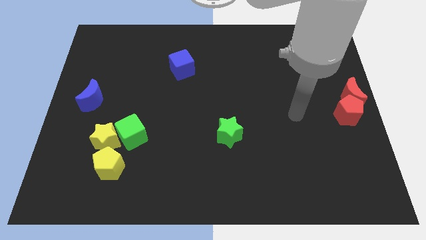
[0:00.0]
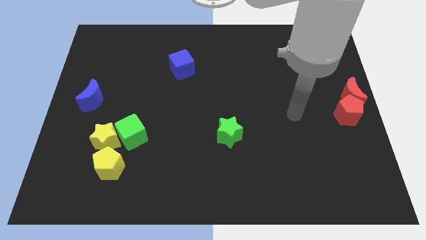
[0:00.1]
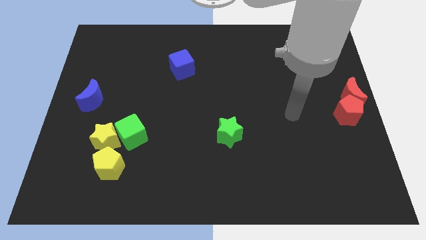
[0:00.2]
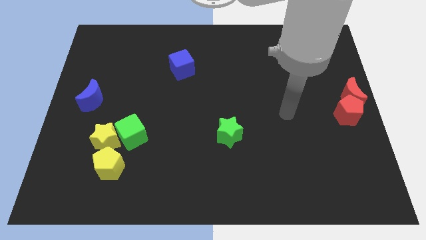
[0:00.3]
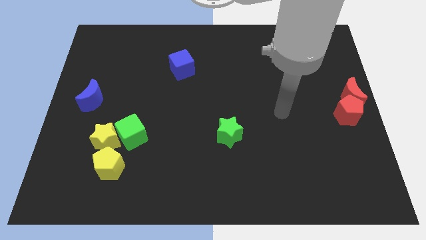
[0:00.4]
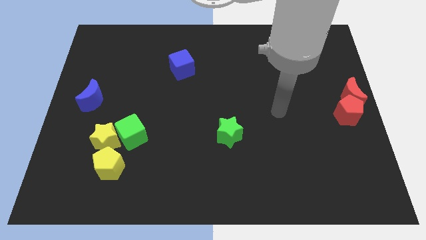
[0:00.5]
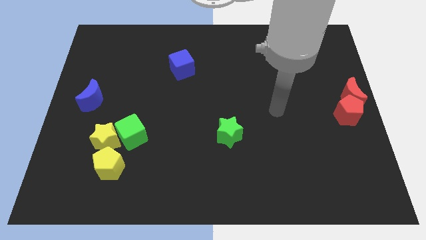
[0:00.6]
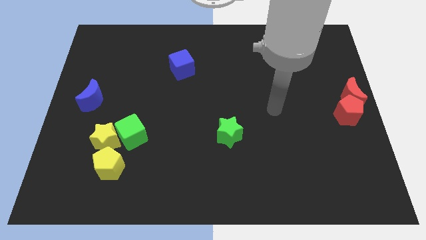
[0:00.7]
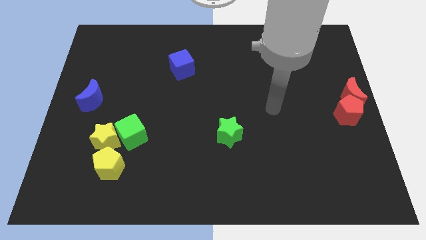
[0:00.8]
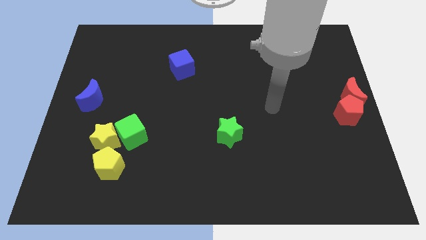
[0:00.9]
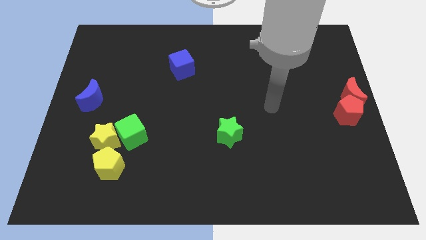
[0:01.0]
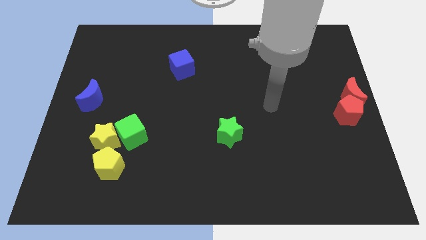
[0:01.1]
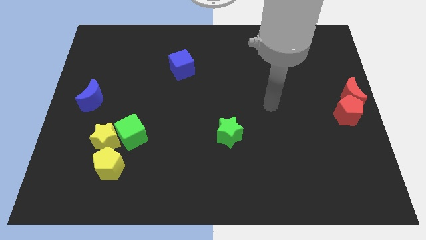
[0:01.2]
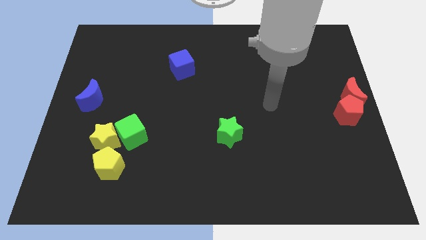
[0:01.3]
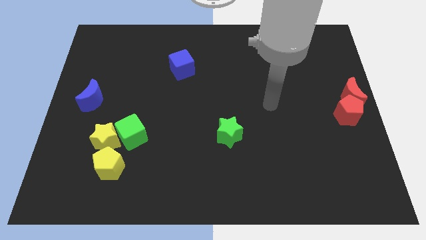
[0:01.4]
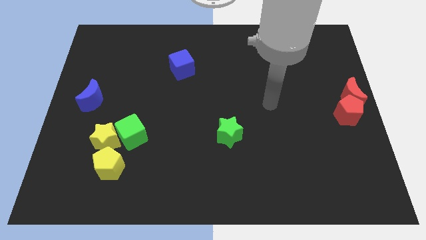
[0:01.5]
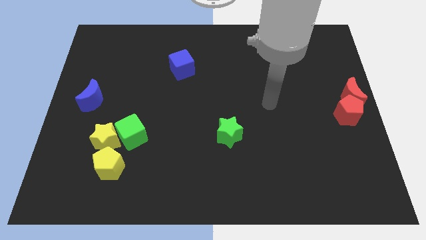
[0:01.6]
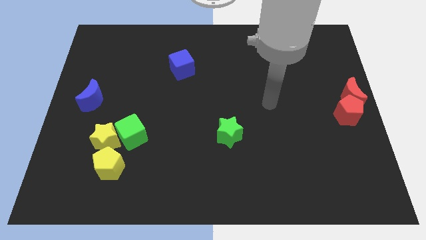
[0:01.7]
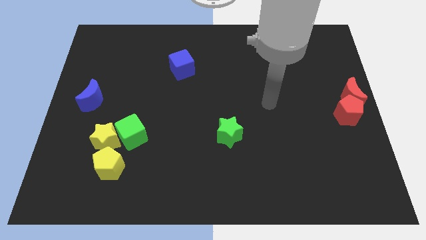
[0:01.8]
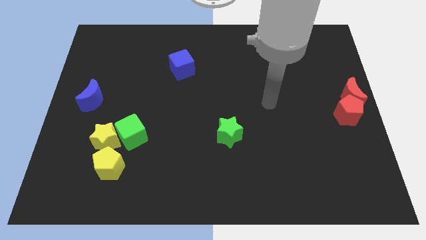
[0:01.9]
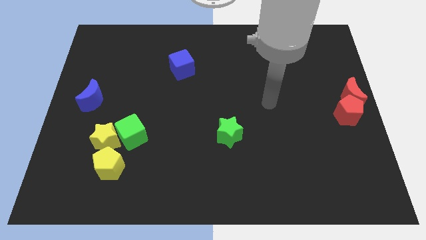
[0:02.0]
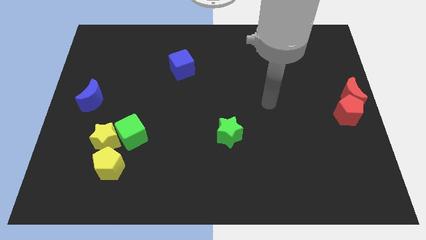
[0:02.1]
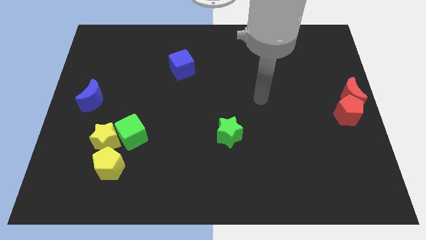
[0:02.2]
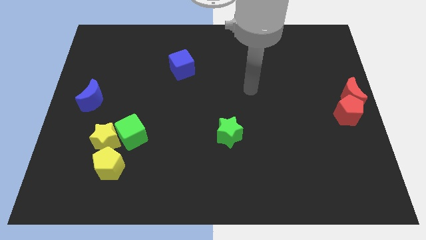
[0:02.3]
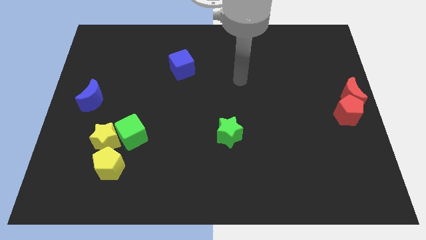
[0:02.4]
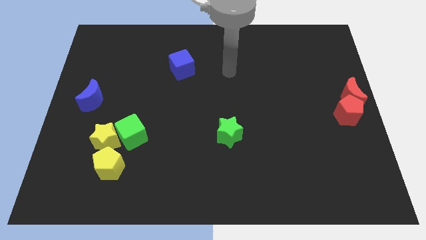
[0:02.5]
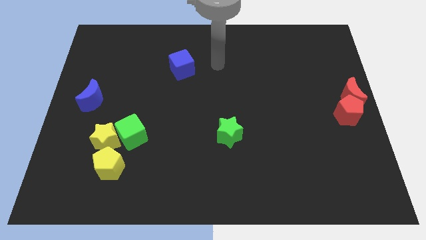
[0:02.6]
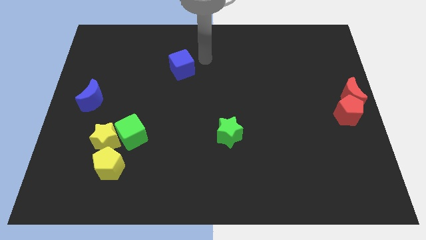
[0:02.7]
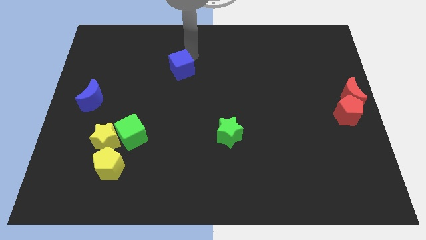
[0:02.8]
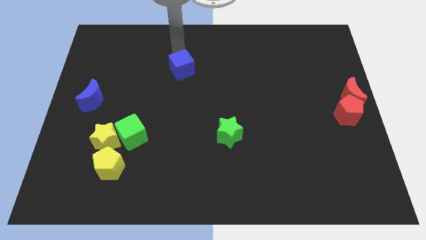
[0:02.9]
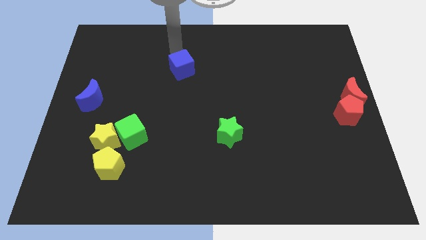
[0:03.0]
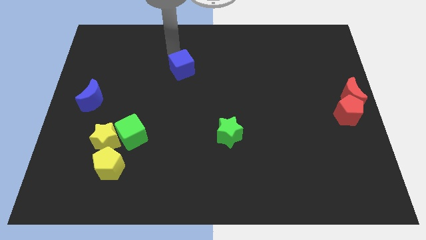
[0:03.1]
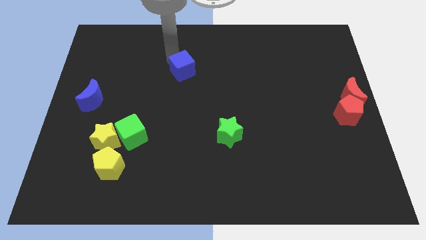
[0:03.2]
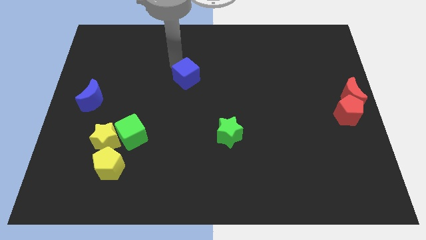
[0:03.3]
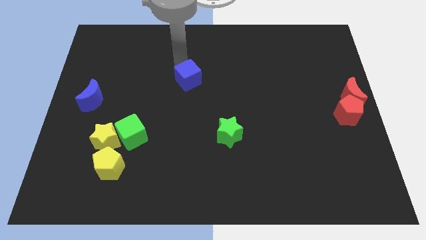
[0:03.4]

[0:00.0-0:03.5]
go near blue cube

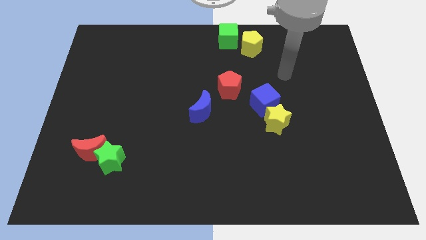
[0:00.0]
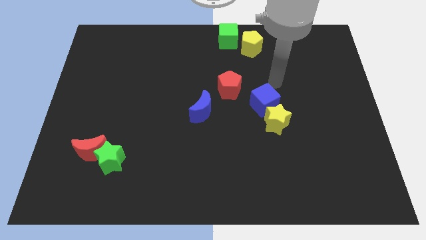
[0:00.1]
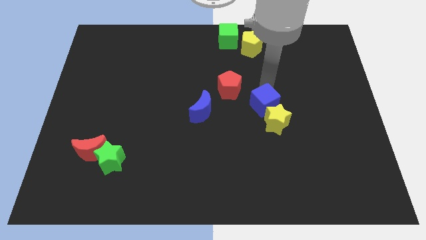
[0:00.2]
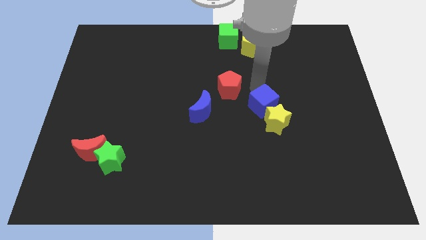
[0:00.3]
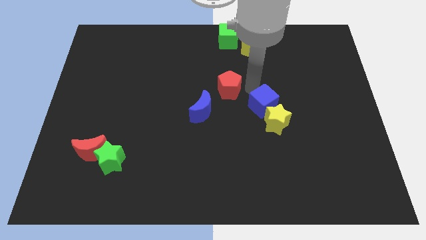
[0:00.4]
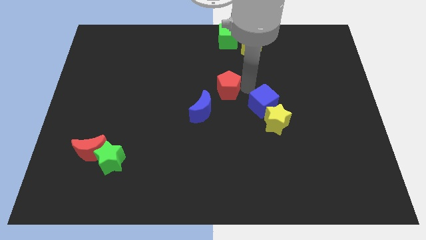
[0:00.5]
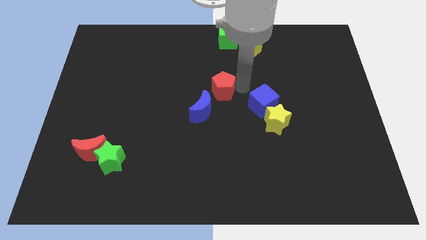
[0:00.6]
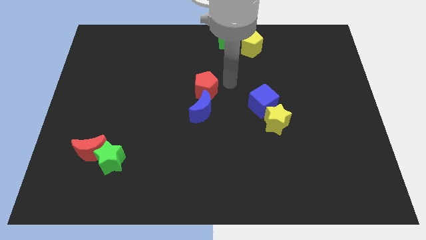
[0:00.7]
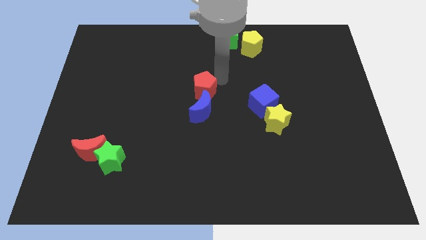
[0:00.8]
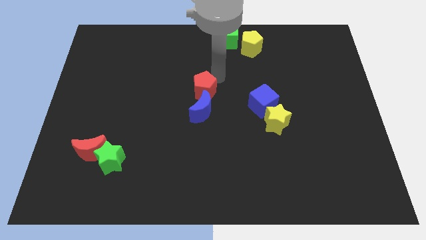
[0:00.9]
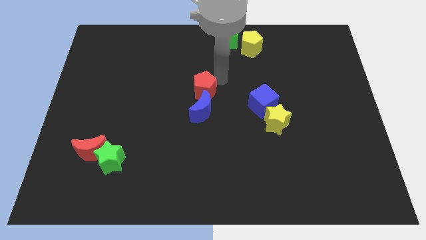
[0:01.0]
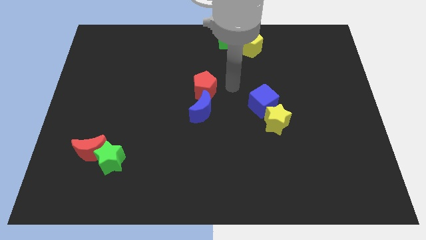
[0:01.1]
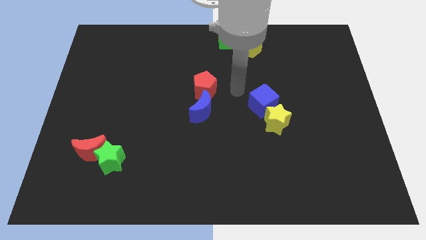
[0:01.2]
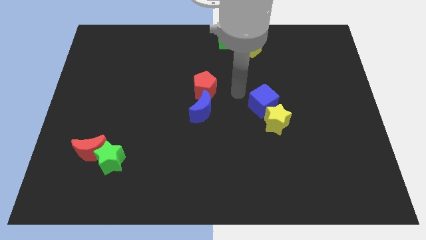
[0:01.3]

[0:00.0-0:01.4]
move the red pentago to the left

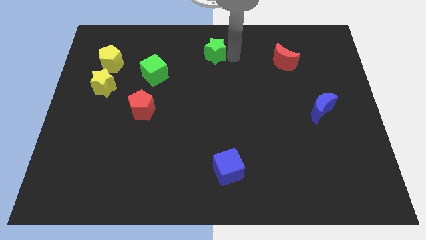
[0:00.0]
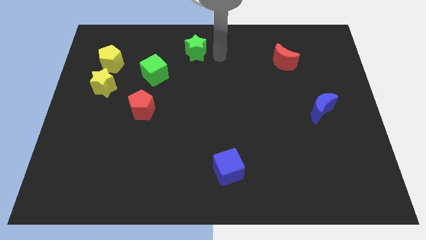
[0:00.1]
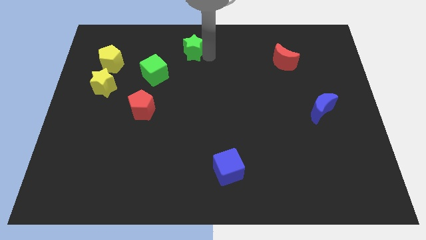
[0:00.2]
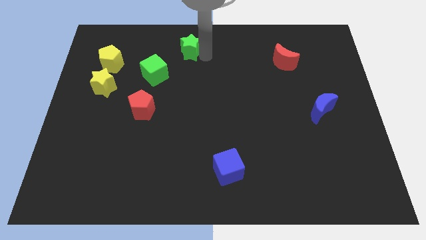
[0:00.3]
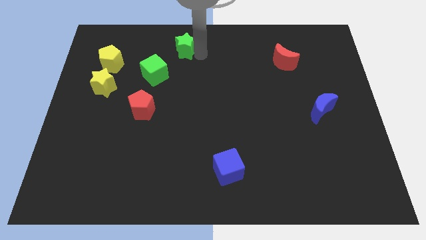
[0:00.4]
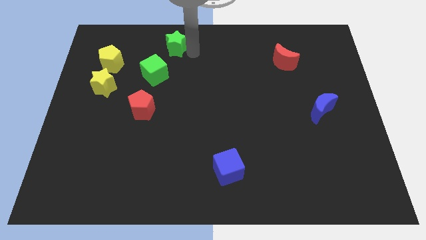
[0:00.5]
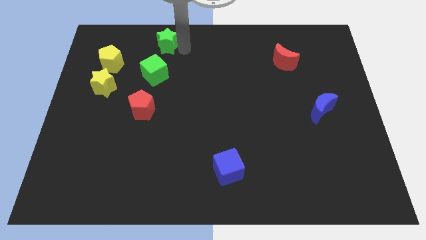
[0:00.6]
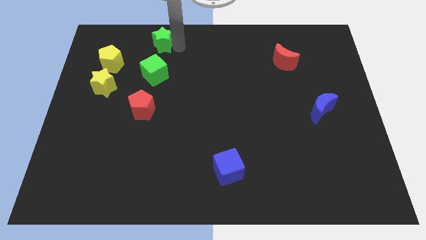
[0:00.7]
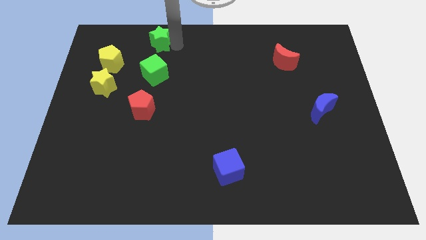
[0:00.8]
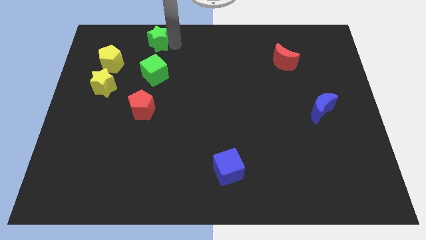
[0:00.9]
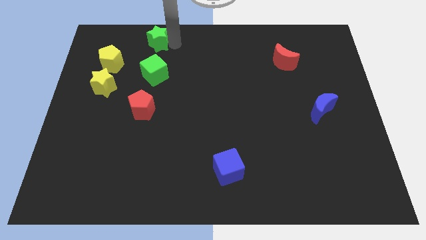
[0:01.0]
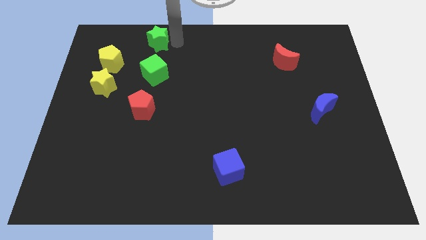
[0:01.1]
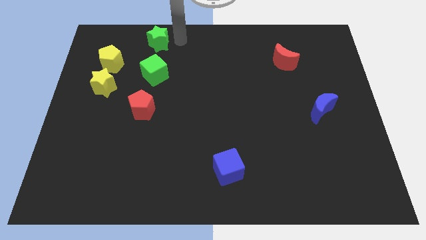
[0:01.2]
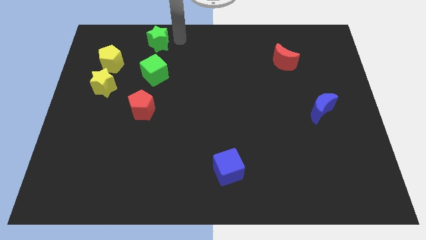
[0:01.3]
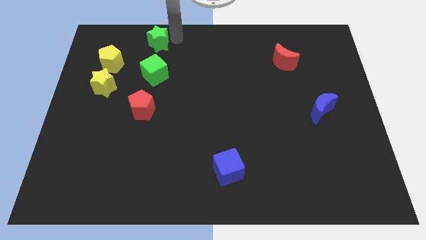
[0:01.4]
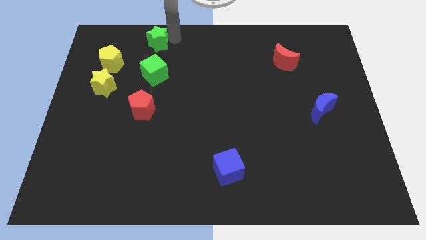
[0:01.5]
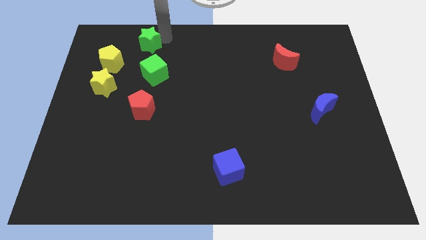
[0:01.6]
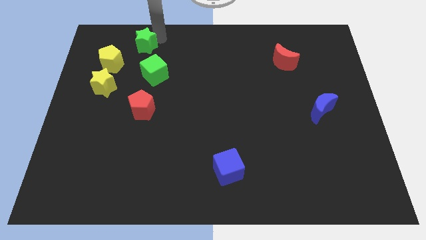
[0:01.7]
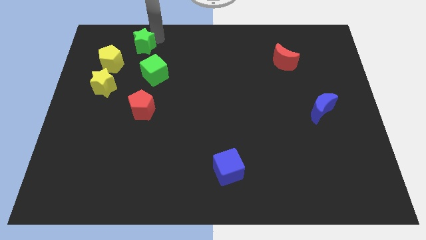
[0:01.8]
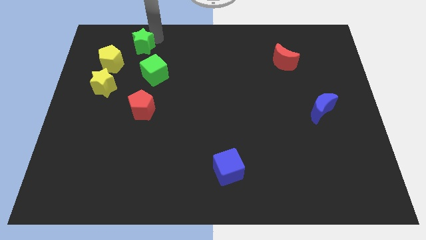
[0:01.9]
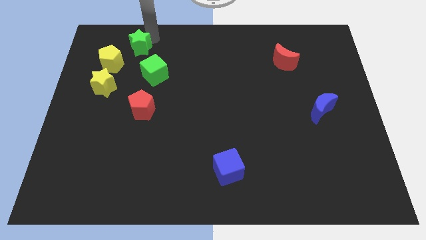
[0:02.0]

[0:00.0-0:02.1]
place green star near yellow polygon

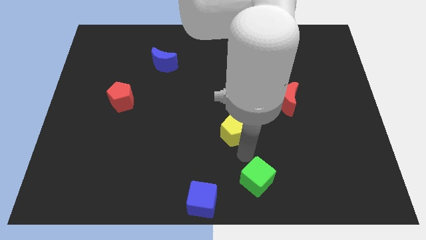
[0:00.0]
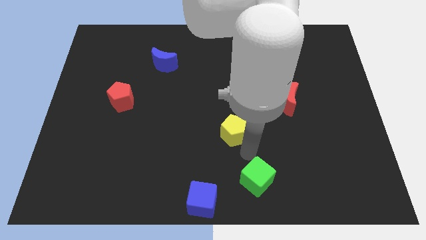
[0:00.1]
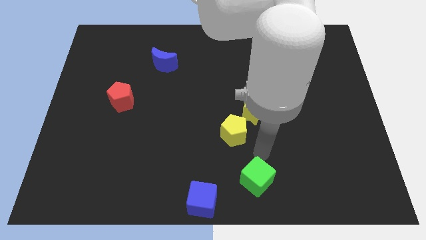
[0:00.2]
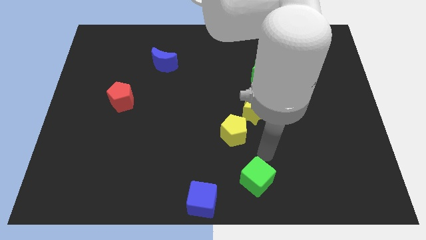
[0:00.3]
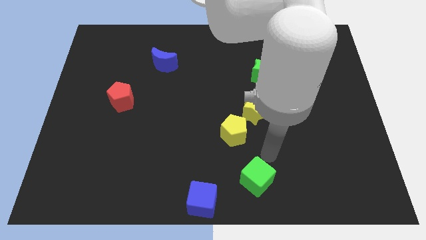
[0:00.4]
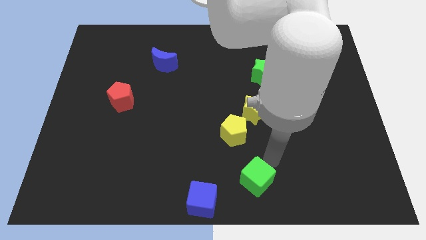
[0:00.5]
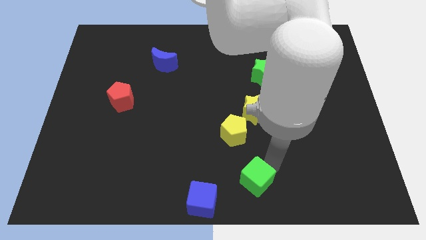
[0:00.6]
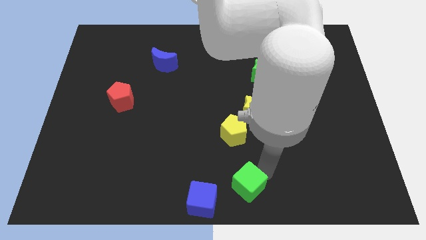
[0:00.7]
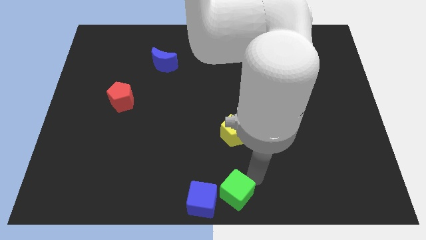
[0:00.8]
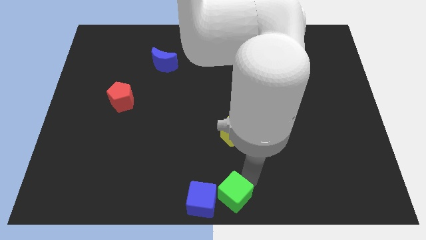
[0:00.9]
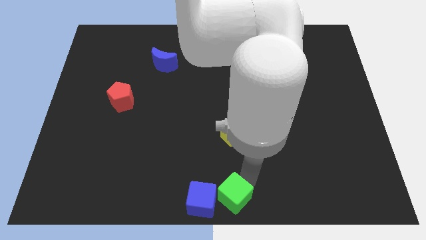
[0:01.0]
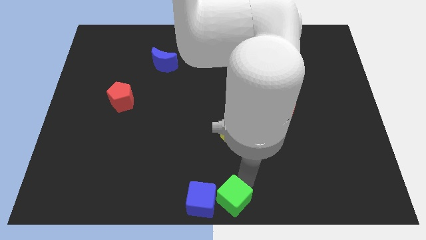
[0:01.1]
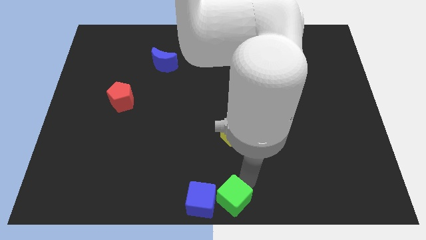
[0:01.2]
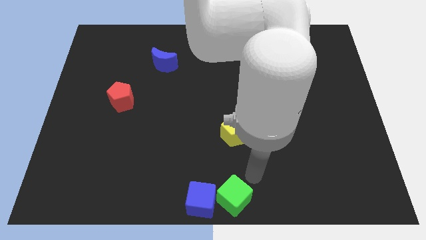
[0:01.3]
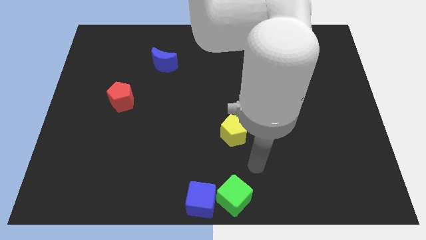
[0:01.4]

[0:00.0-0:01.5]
place the green cube to the right side of the blue cube

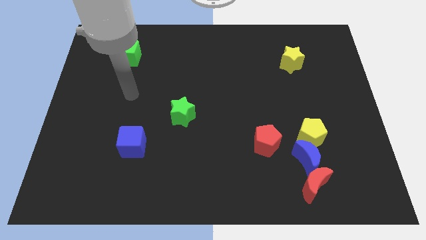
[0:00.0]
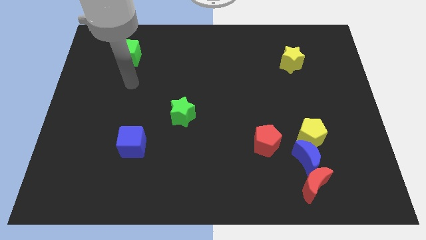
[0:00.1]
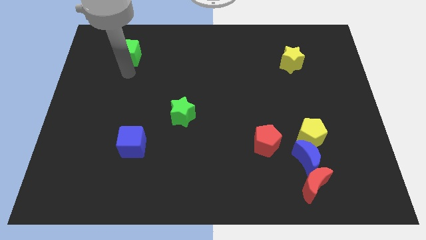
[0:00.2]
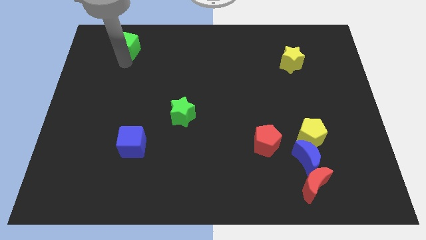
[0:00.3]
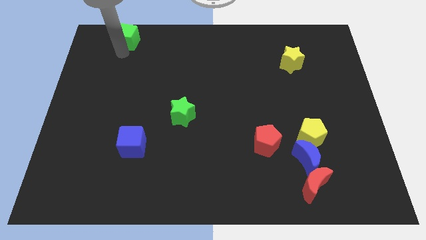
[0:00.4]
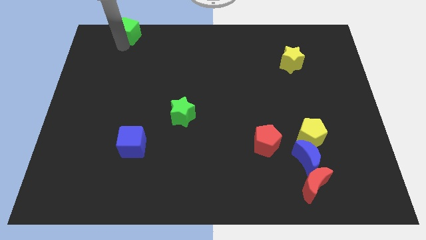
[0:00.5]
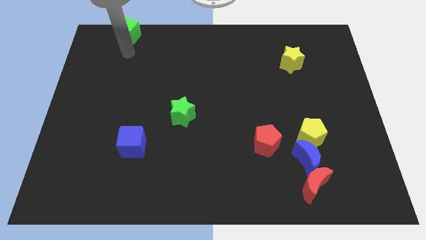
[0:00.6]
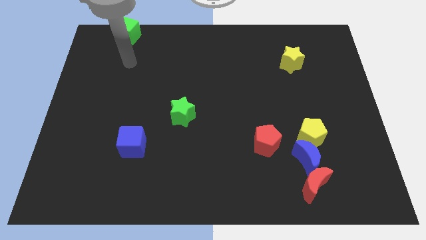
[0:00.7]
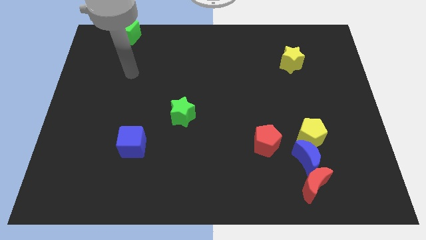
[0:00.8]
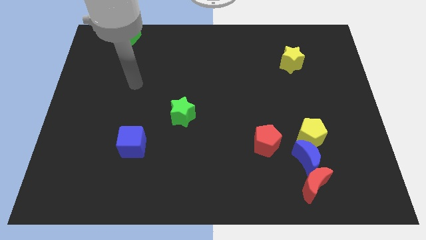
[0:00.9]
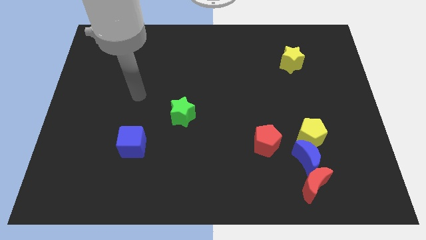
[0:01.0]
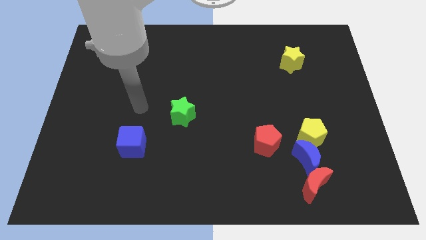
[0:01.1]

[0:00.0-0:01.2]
move the green cube to the top of the board
